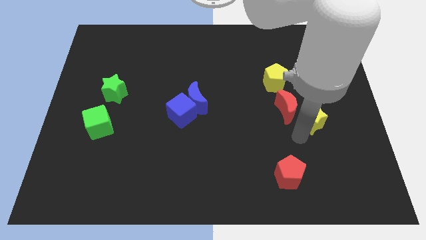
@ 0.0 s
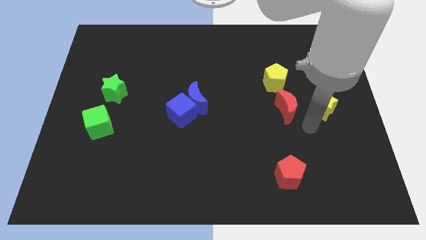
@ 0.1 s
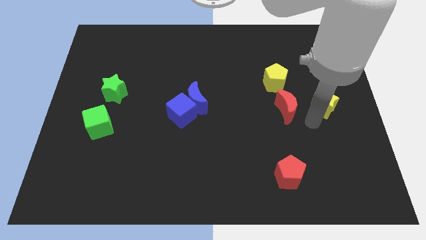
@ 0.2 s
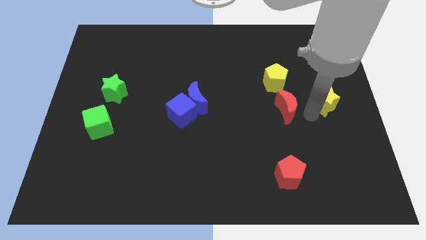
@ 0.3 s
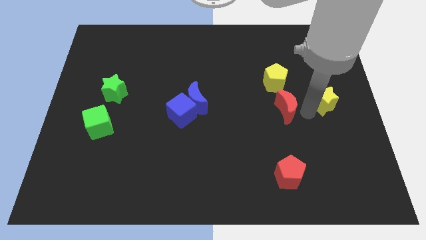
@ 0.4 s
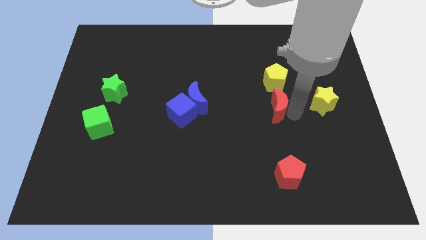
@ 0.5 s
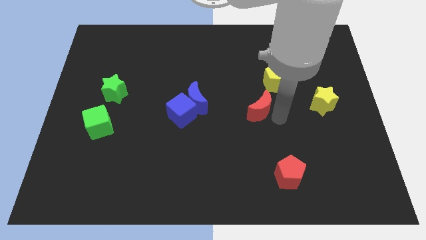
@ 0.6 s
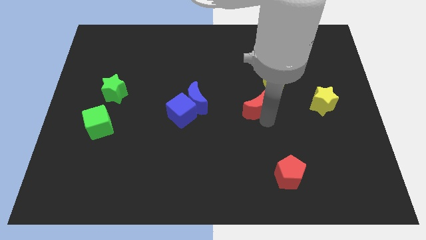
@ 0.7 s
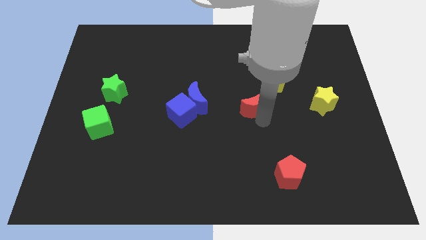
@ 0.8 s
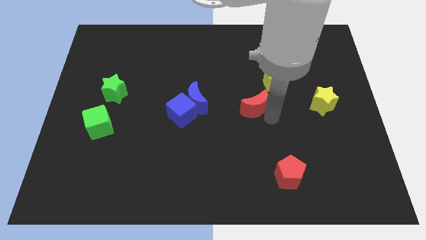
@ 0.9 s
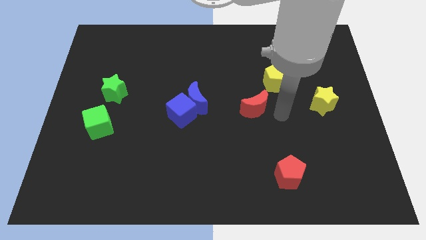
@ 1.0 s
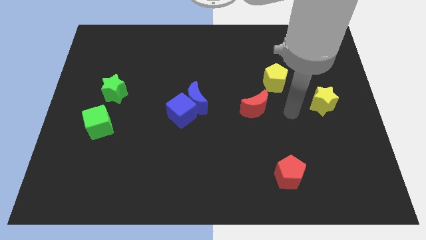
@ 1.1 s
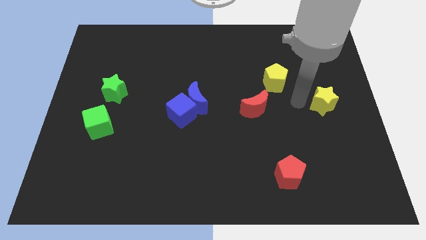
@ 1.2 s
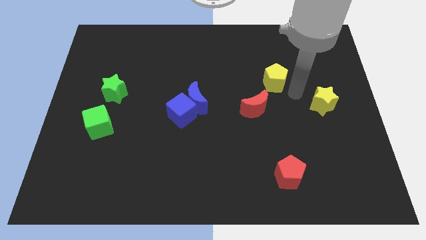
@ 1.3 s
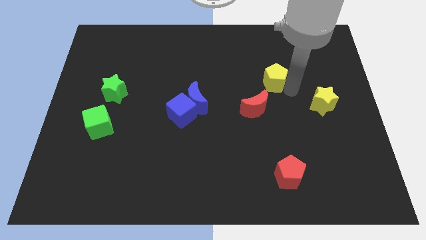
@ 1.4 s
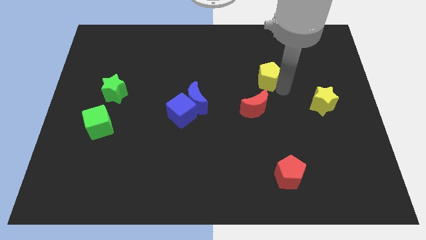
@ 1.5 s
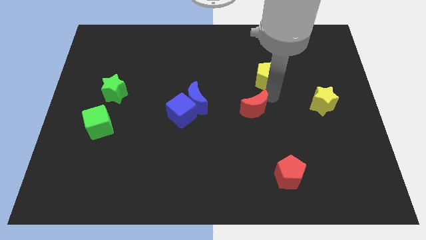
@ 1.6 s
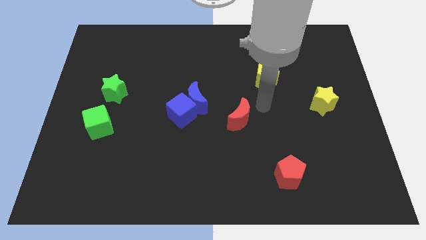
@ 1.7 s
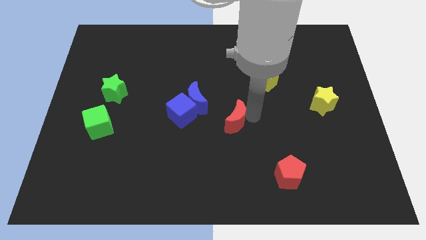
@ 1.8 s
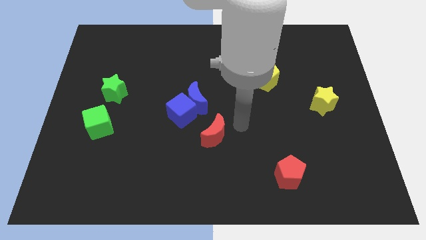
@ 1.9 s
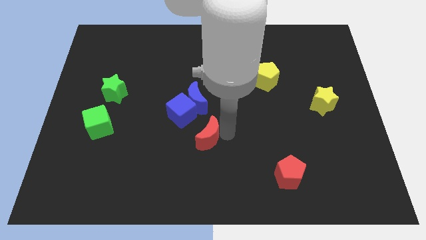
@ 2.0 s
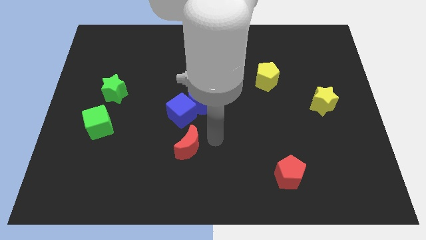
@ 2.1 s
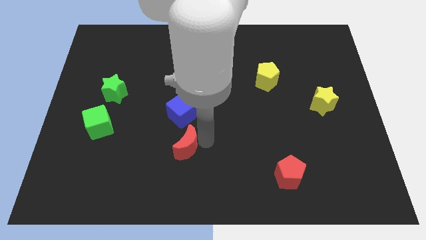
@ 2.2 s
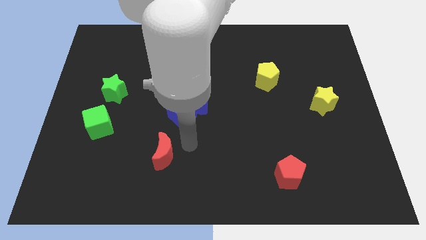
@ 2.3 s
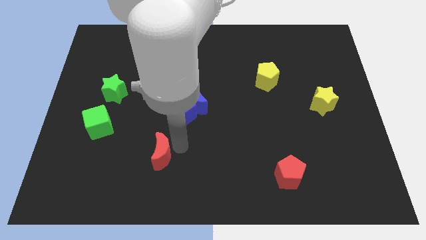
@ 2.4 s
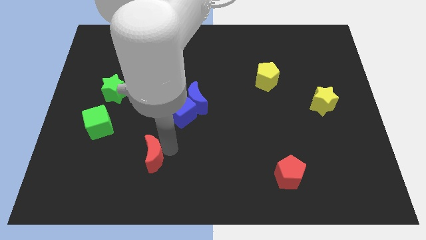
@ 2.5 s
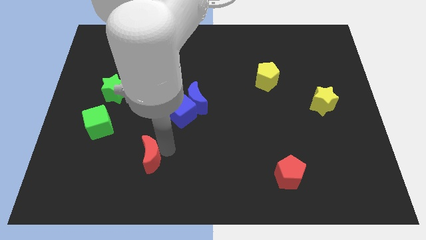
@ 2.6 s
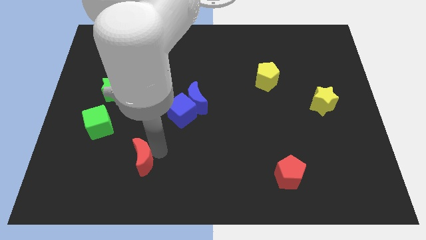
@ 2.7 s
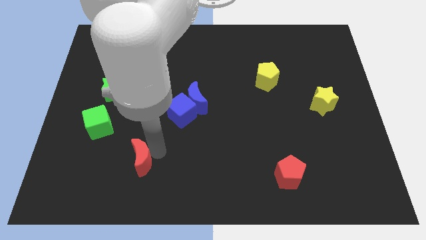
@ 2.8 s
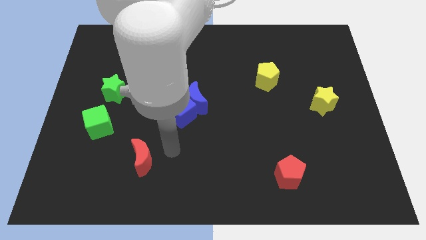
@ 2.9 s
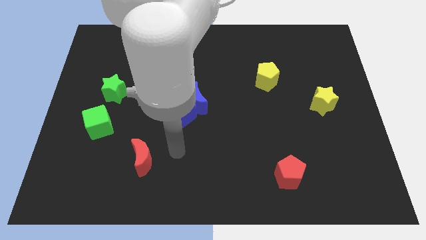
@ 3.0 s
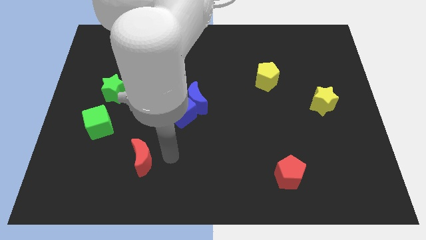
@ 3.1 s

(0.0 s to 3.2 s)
separate yellow star and red moon

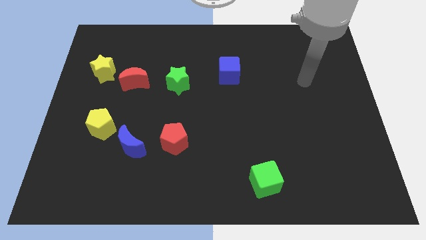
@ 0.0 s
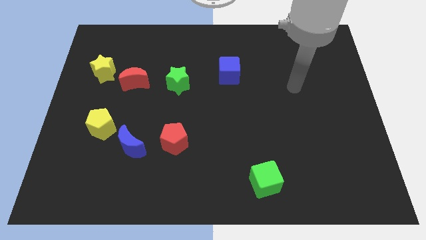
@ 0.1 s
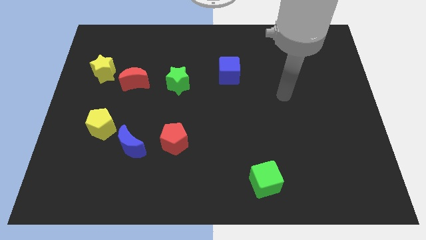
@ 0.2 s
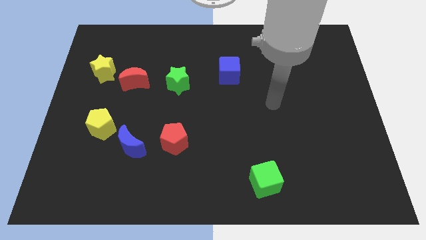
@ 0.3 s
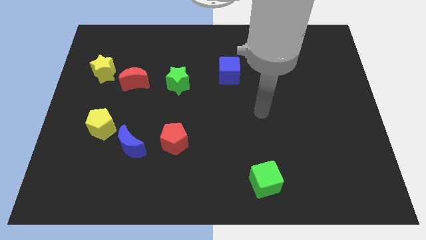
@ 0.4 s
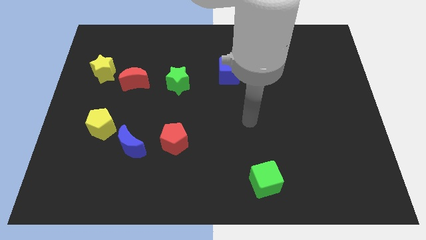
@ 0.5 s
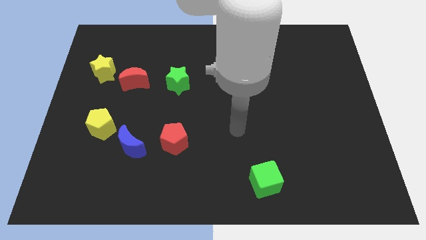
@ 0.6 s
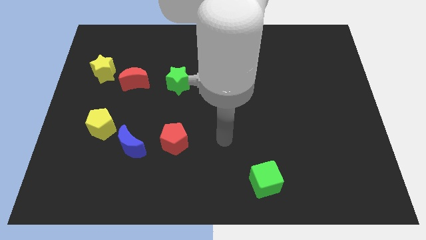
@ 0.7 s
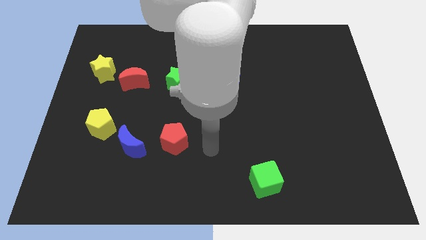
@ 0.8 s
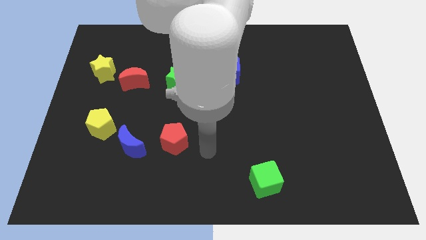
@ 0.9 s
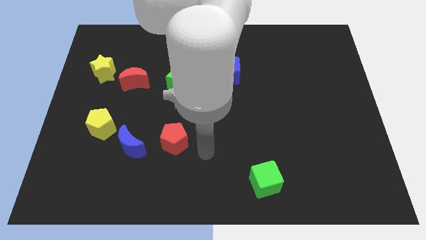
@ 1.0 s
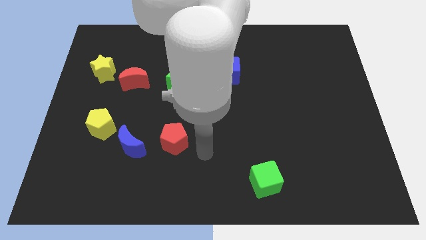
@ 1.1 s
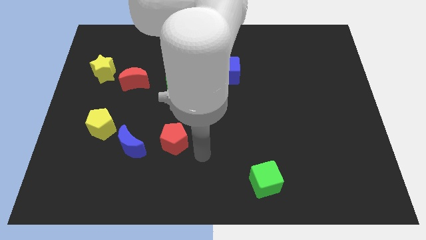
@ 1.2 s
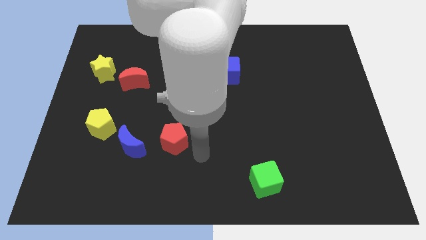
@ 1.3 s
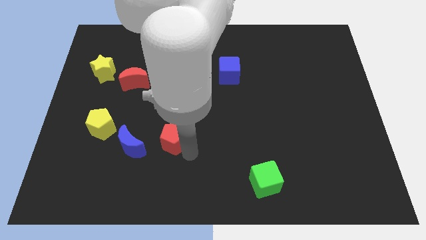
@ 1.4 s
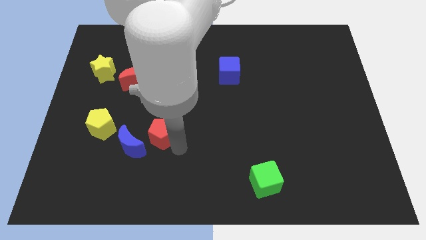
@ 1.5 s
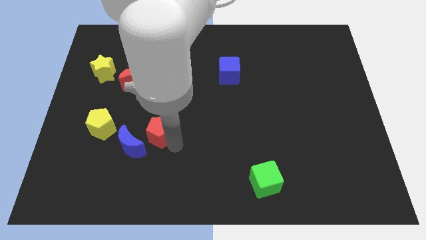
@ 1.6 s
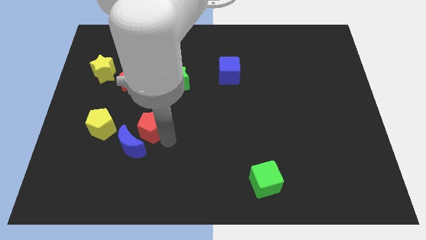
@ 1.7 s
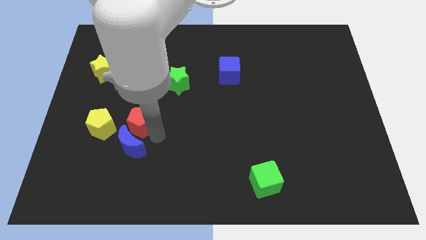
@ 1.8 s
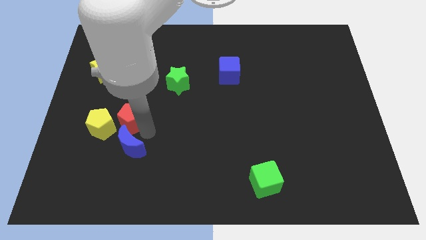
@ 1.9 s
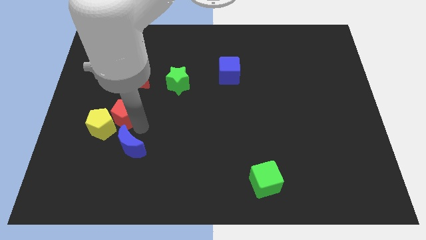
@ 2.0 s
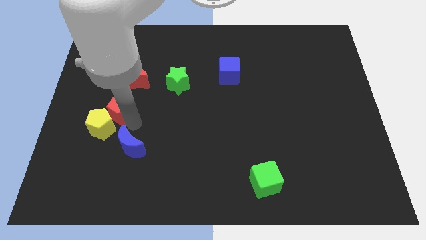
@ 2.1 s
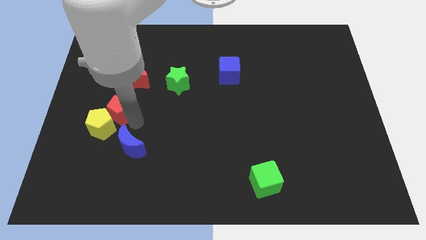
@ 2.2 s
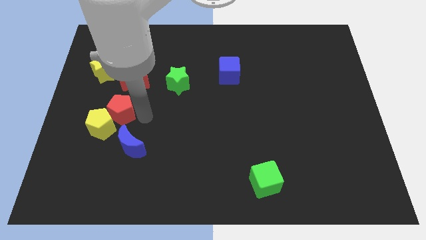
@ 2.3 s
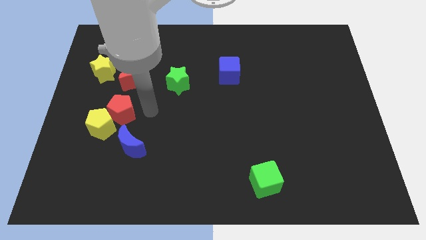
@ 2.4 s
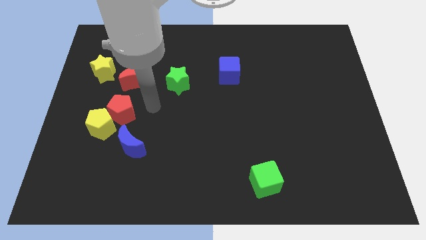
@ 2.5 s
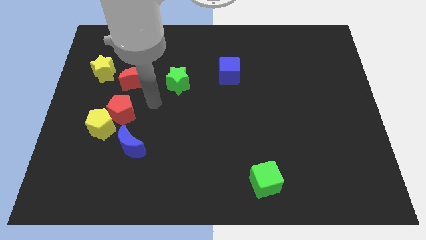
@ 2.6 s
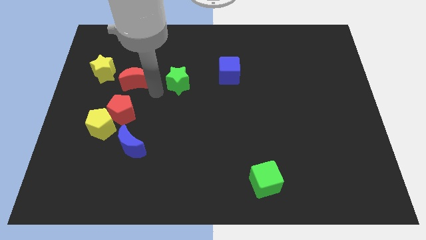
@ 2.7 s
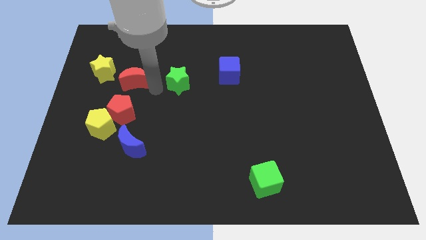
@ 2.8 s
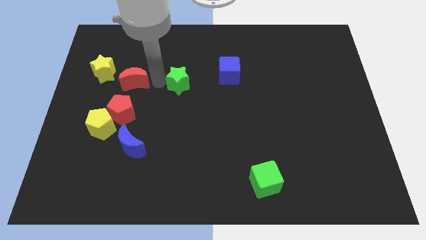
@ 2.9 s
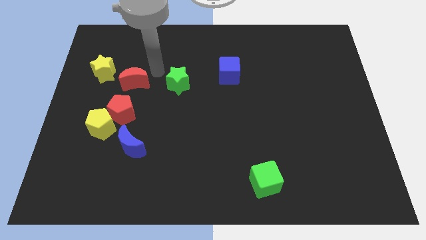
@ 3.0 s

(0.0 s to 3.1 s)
move the red pentagon near to the yellow pentagon

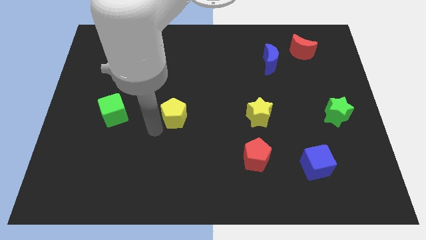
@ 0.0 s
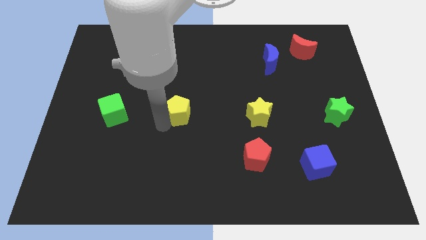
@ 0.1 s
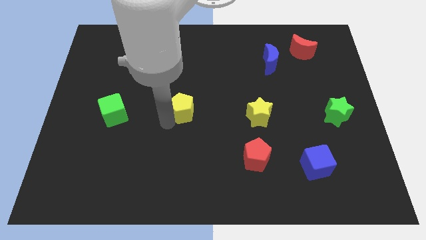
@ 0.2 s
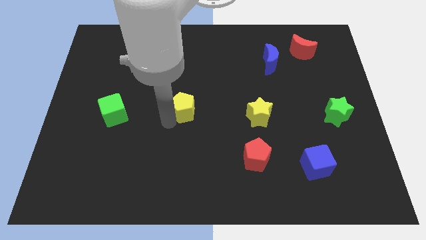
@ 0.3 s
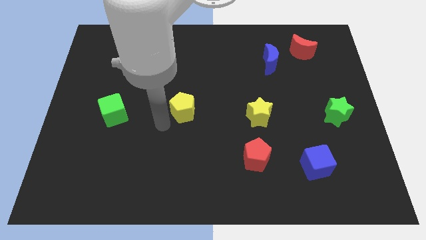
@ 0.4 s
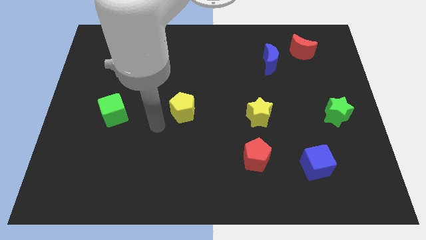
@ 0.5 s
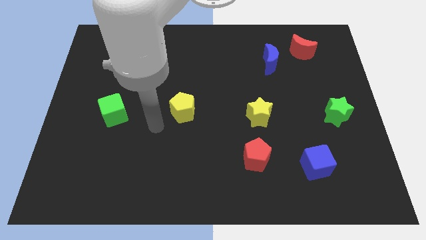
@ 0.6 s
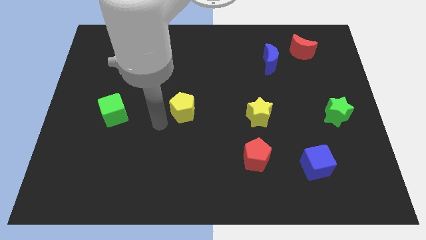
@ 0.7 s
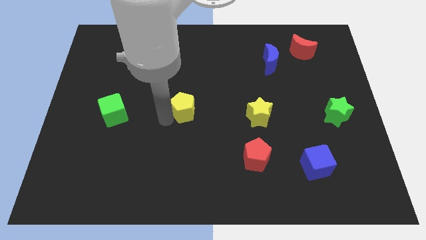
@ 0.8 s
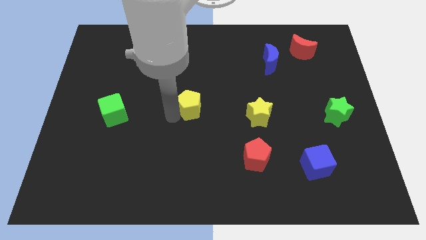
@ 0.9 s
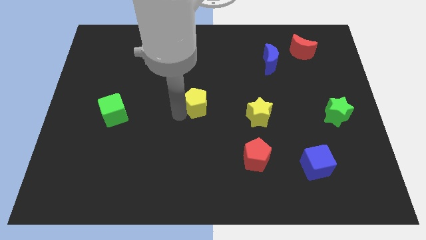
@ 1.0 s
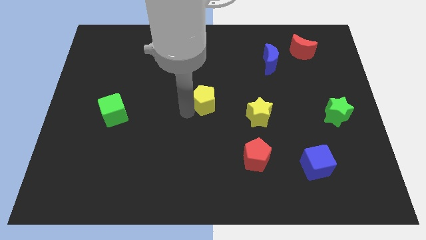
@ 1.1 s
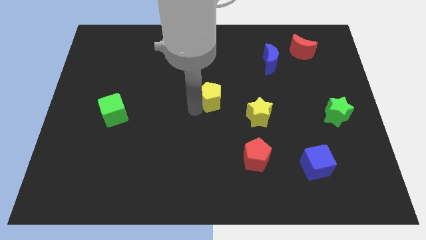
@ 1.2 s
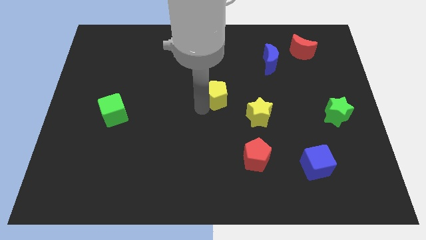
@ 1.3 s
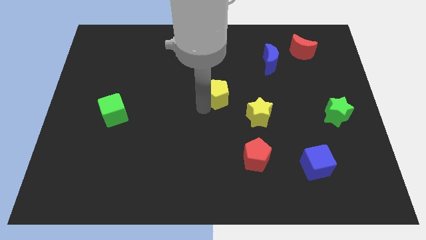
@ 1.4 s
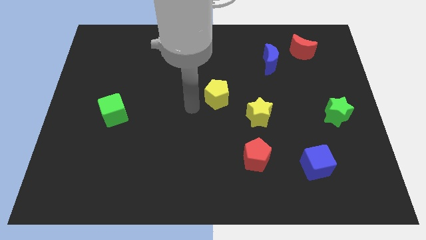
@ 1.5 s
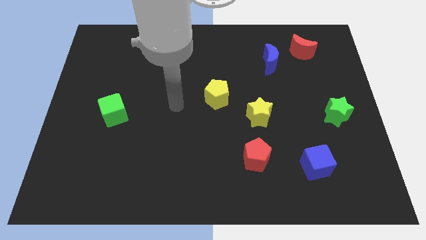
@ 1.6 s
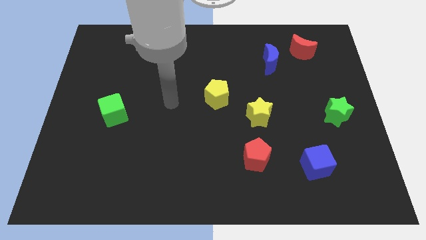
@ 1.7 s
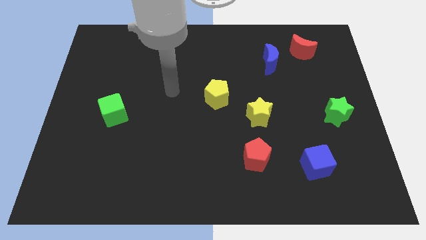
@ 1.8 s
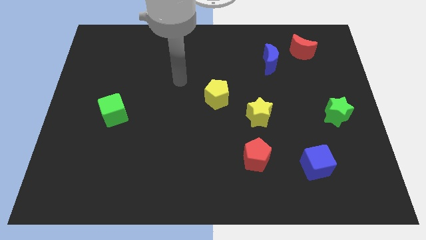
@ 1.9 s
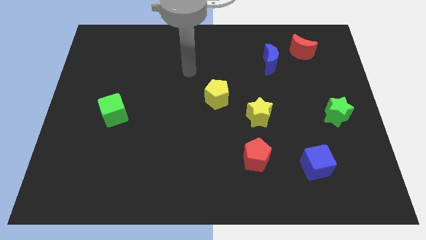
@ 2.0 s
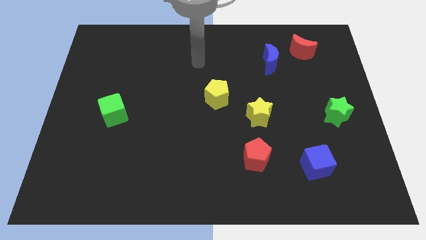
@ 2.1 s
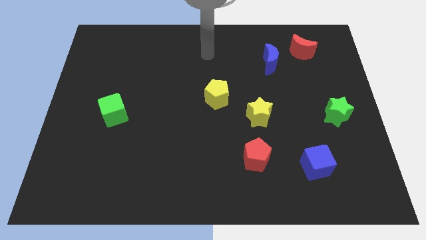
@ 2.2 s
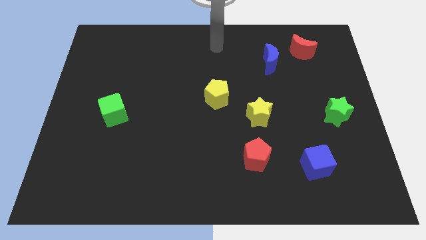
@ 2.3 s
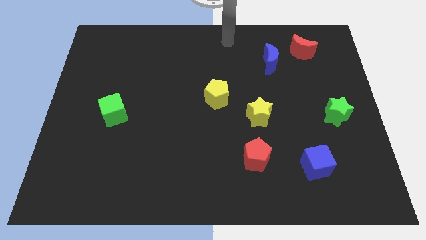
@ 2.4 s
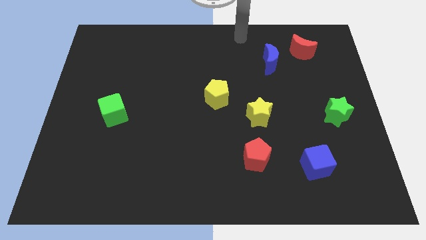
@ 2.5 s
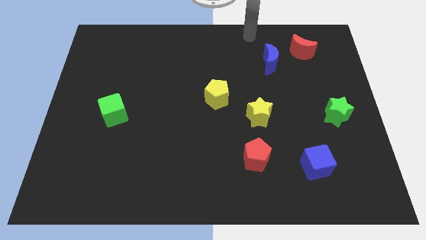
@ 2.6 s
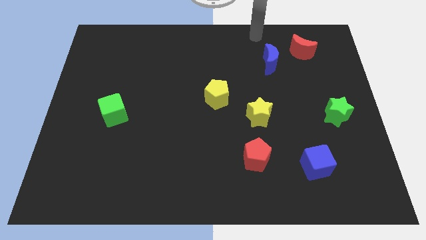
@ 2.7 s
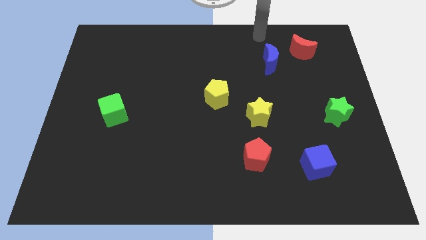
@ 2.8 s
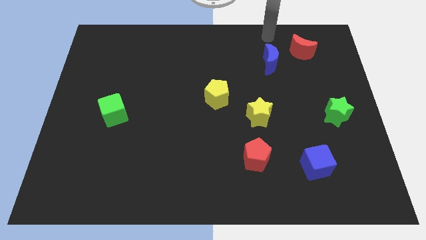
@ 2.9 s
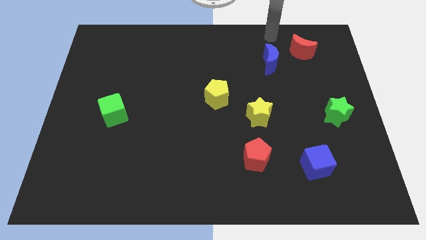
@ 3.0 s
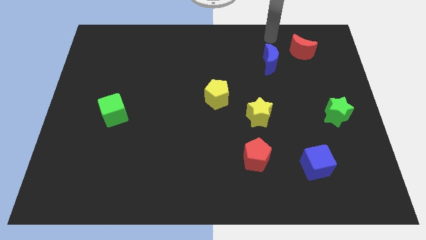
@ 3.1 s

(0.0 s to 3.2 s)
place yellow pentagon to the top left of yellow star
